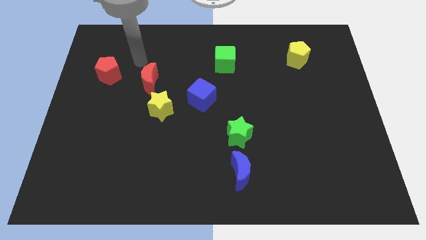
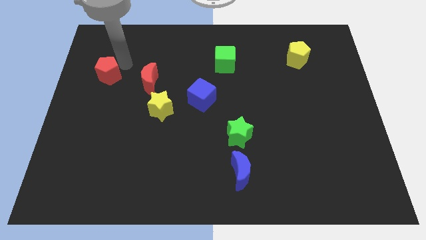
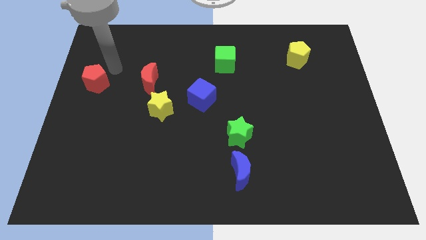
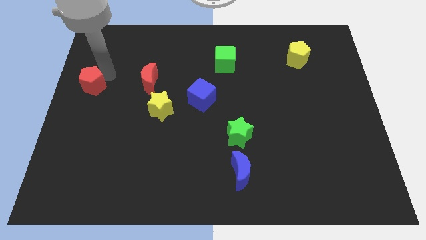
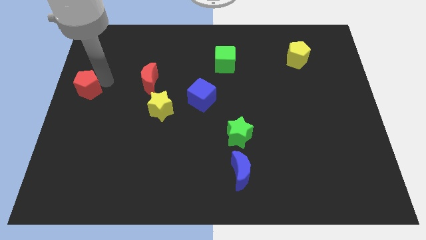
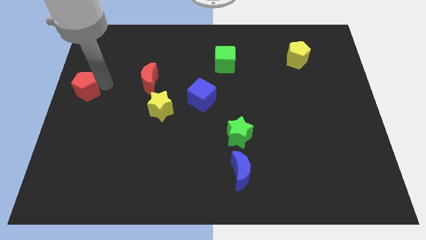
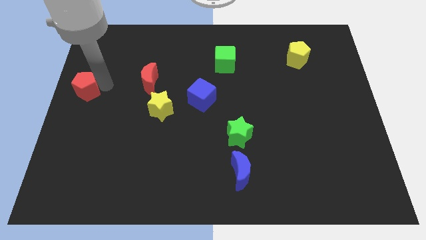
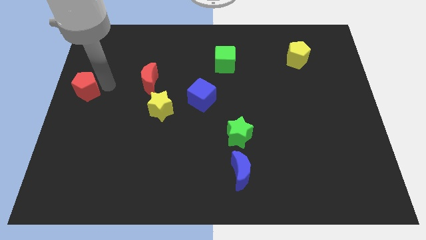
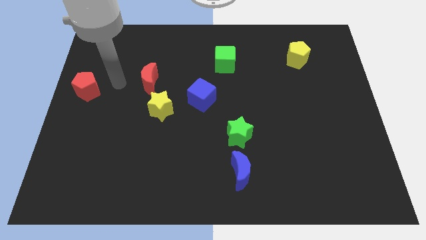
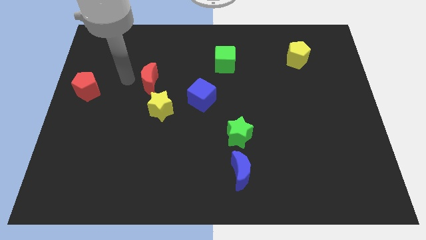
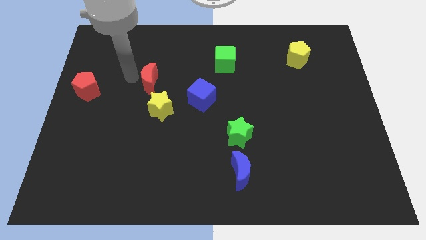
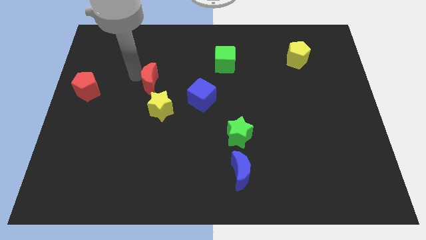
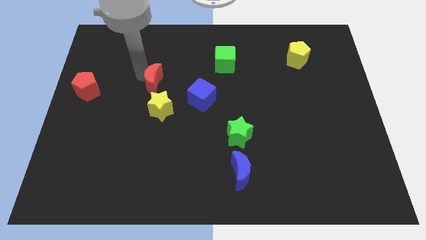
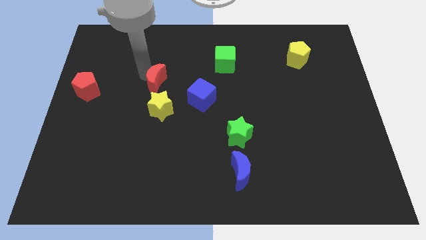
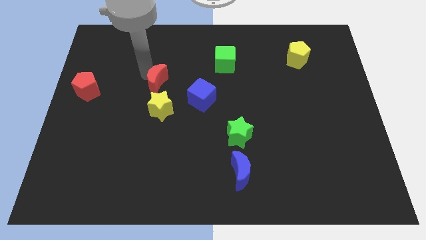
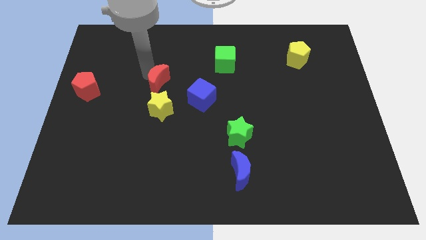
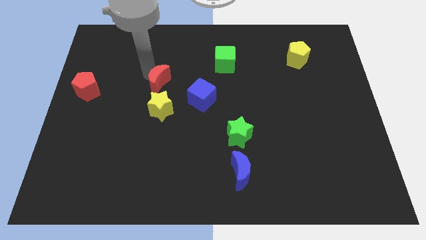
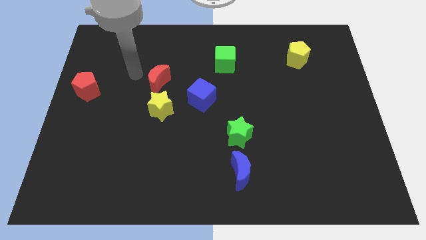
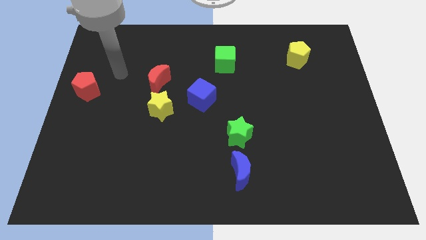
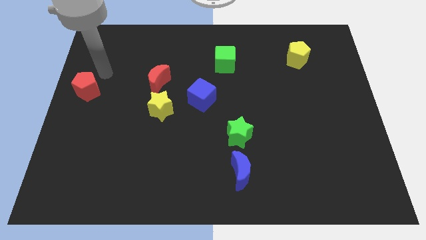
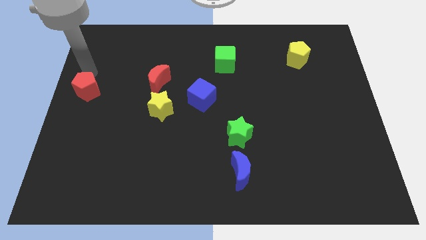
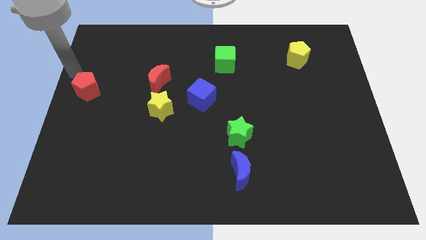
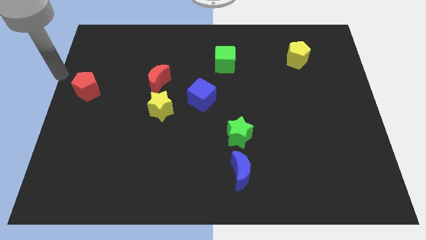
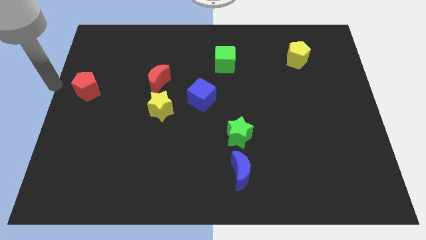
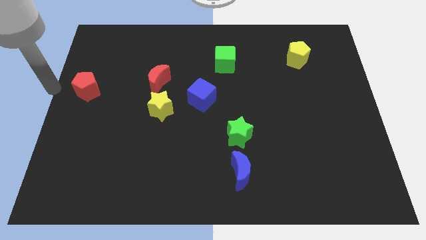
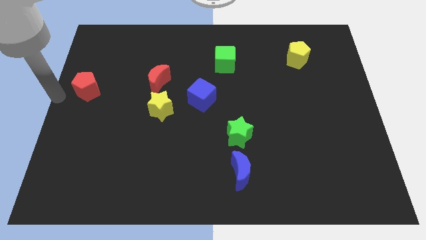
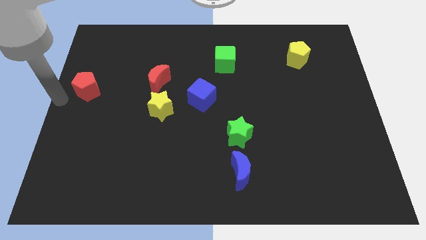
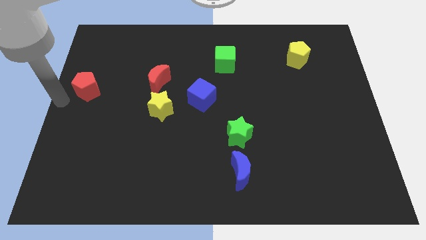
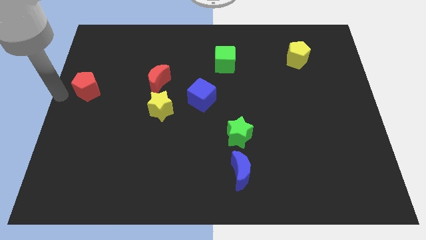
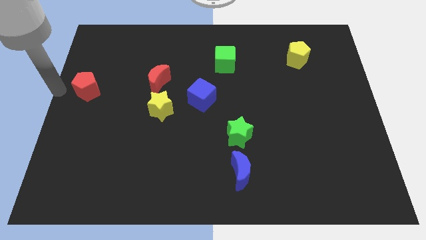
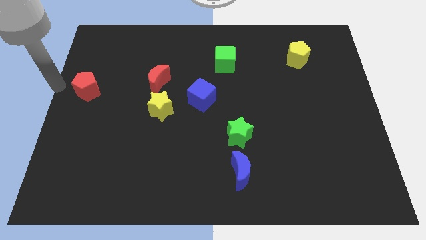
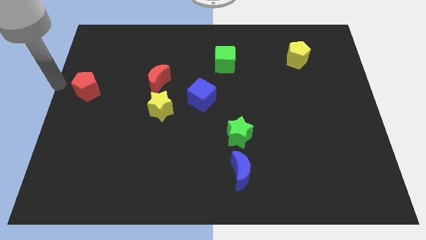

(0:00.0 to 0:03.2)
separate the red pentagon from red moon

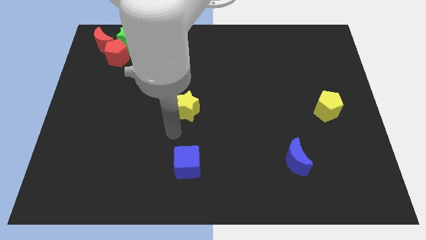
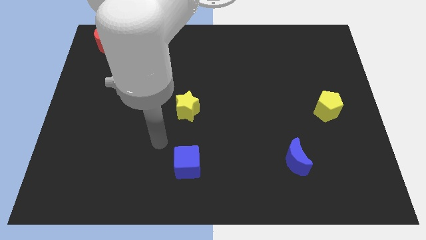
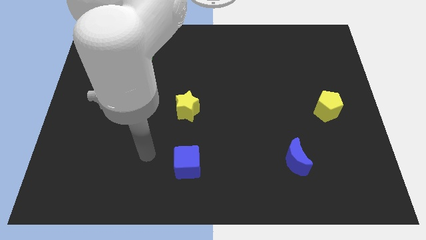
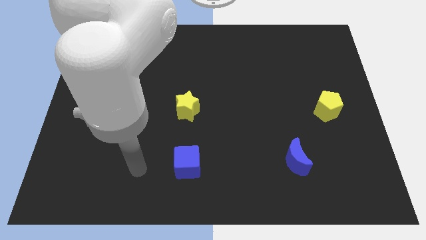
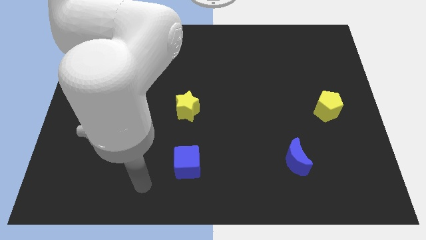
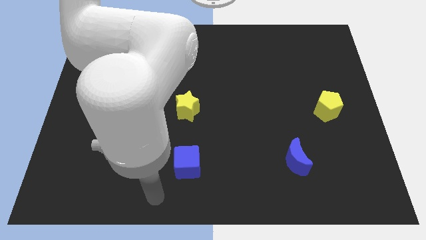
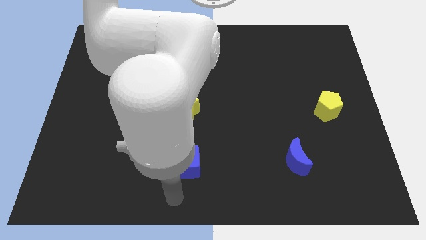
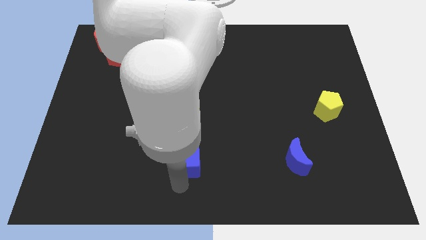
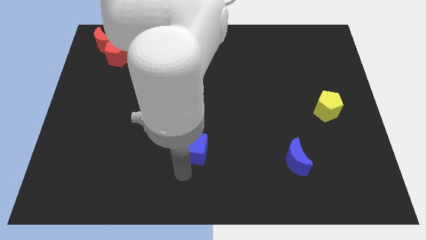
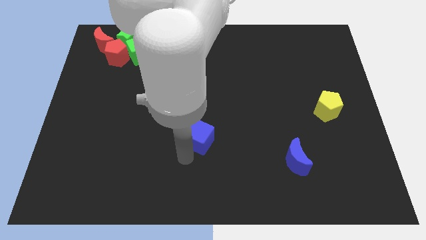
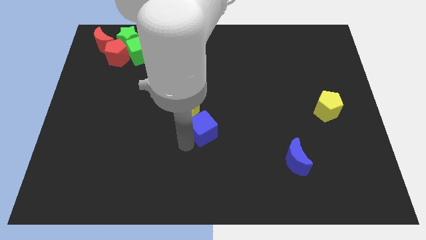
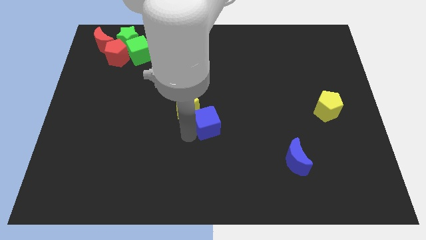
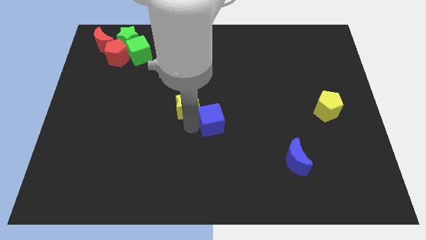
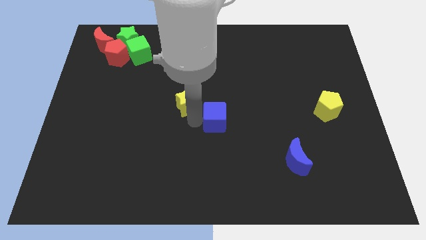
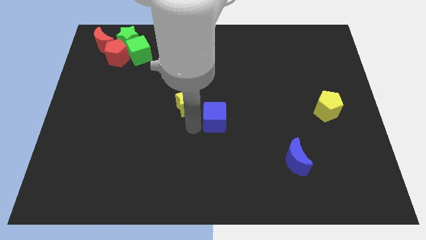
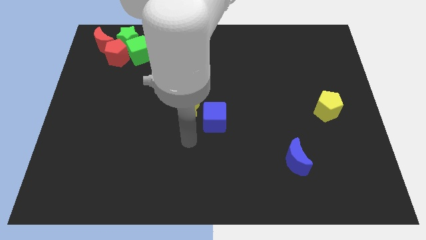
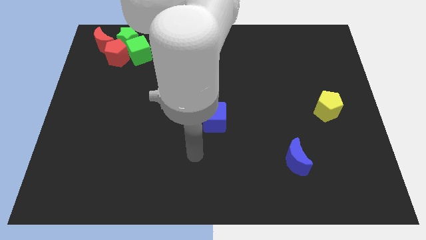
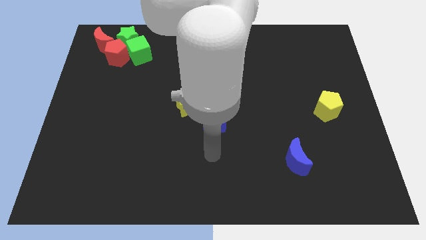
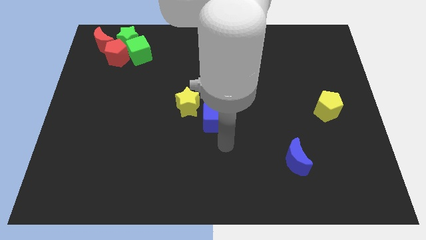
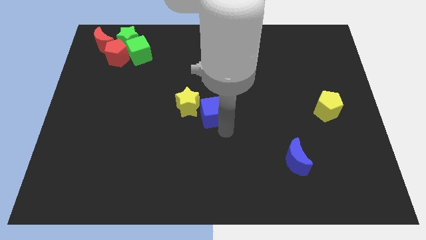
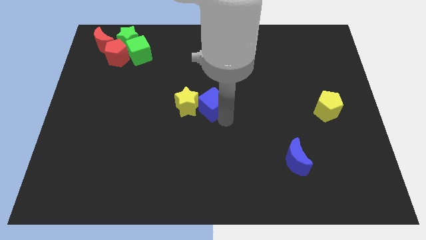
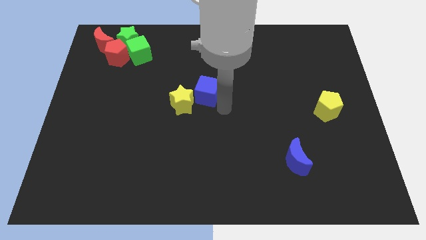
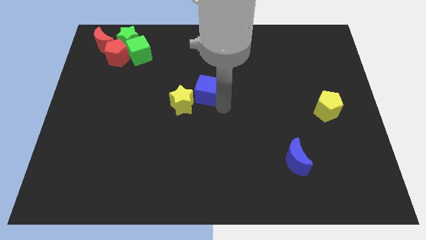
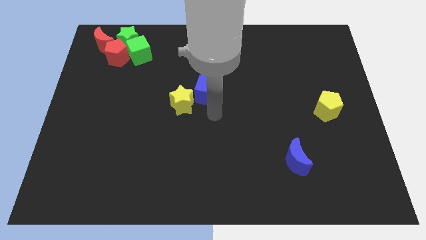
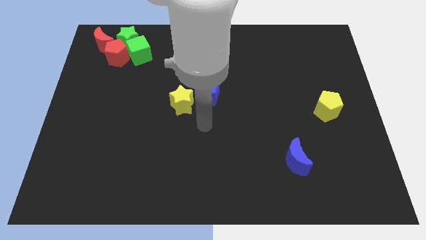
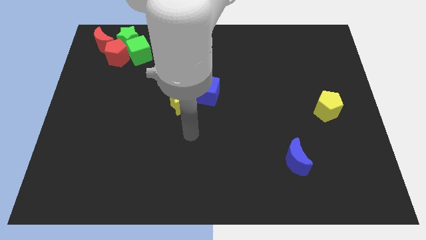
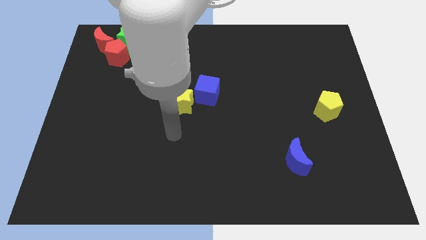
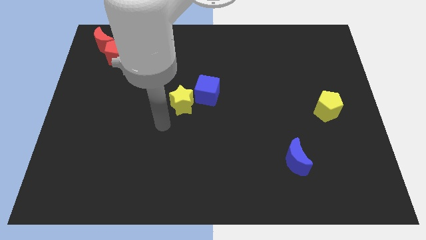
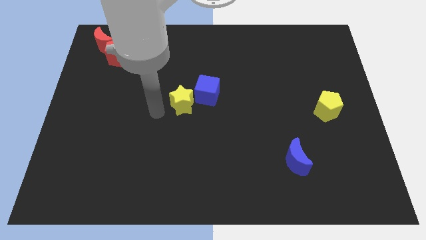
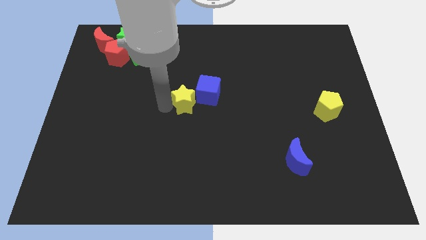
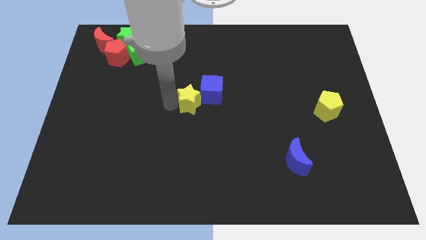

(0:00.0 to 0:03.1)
push the blue cube into the yellow star

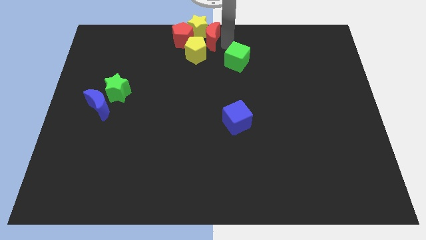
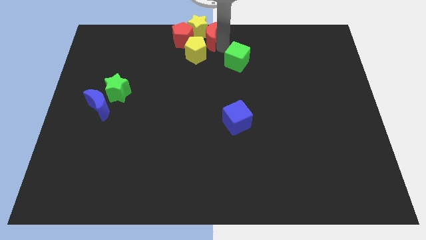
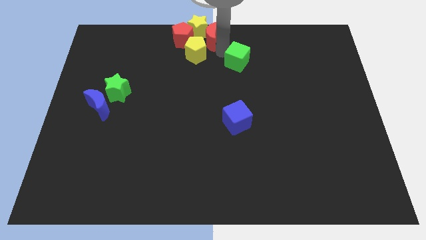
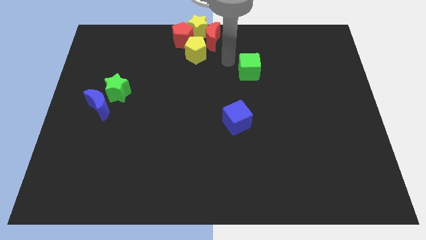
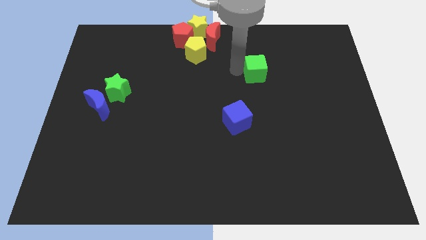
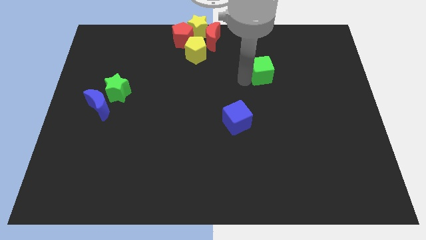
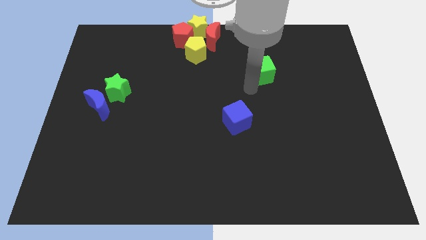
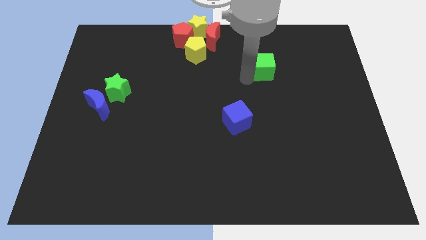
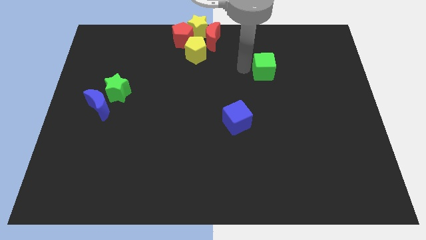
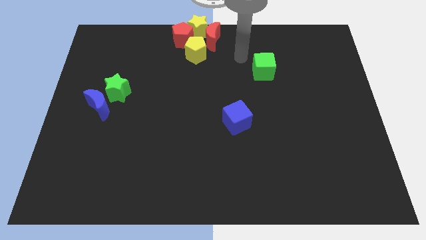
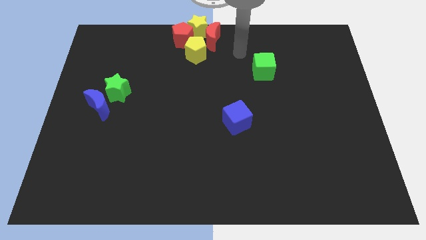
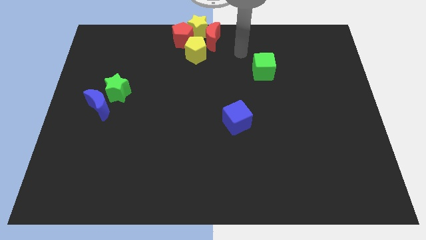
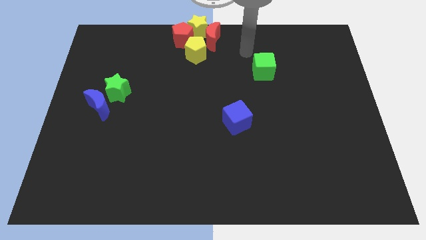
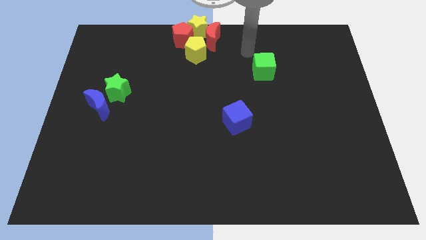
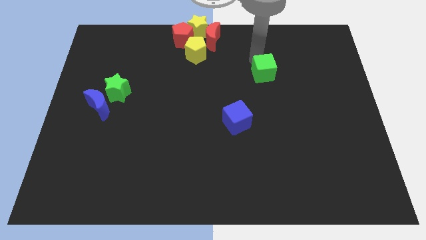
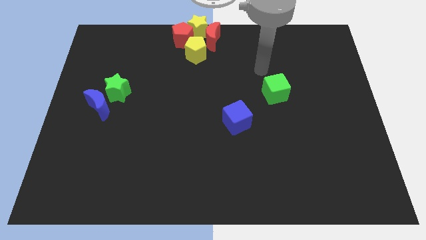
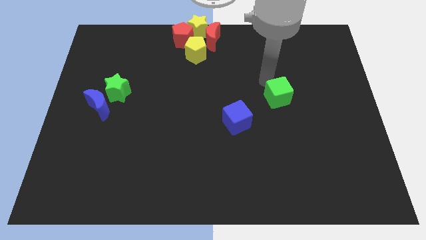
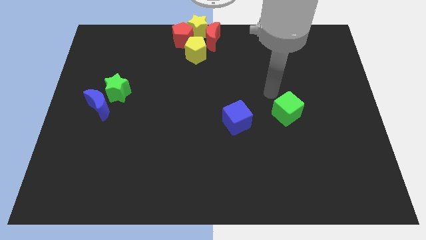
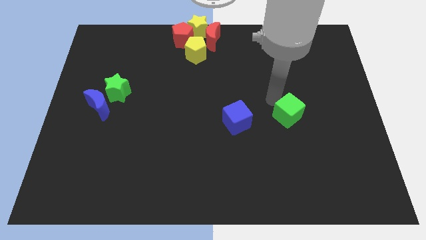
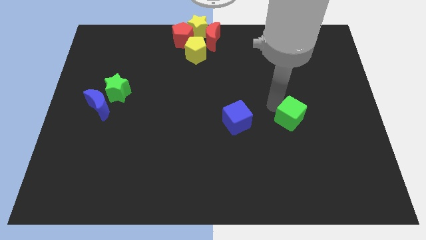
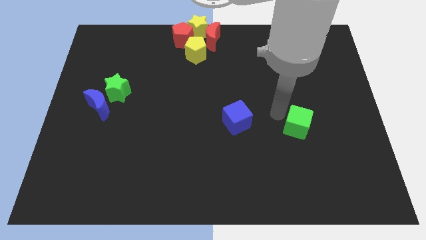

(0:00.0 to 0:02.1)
push the green cube to the right of the blue cube

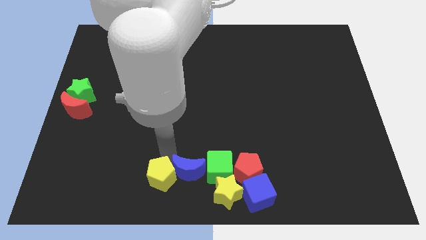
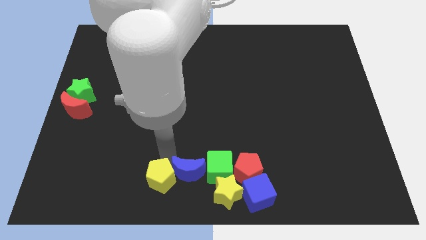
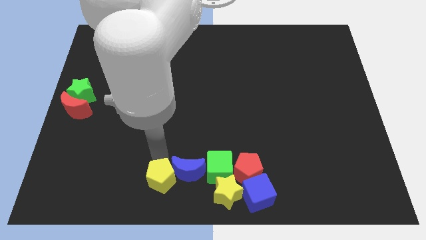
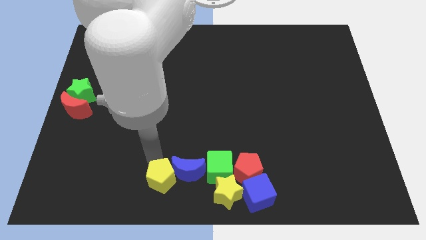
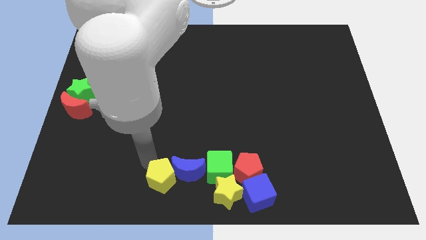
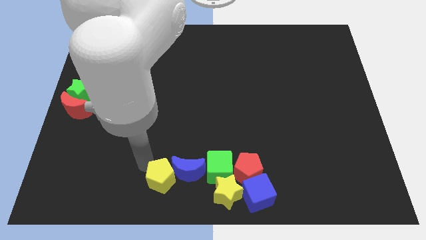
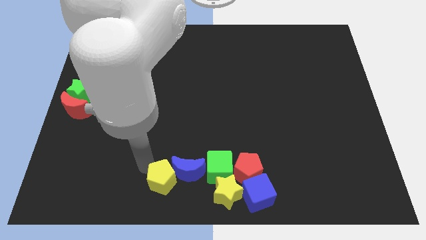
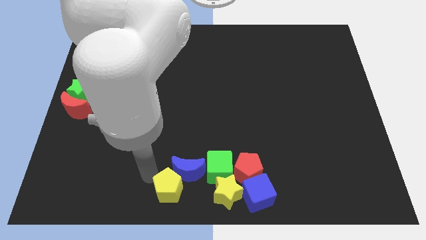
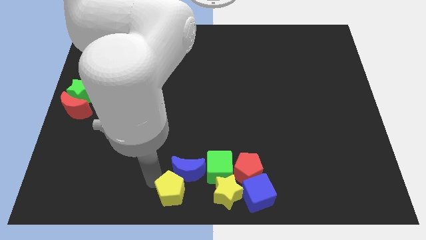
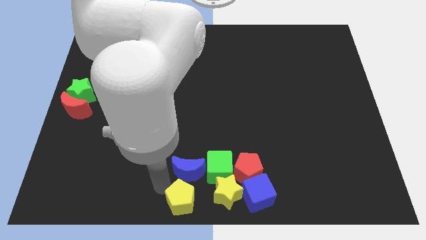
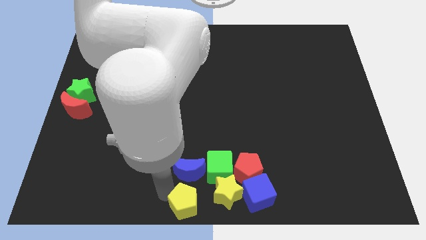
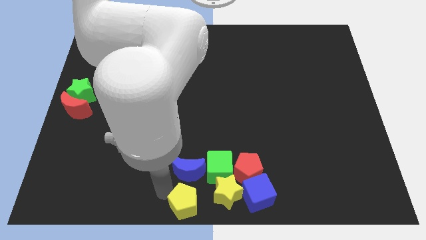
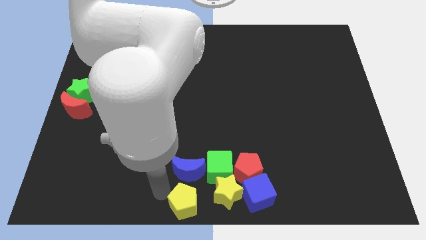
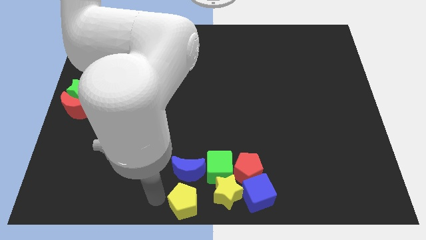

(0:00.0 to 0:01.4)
place the yellow pentagon below the blue moon
